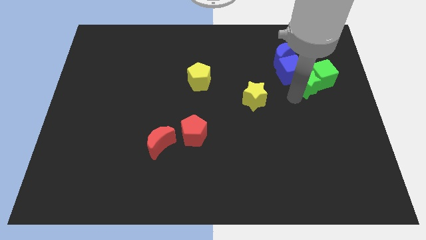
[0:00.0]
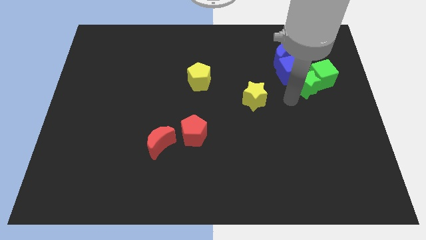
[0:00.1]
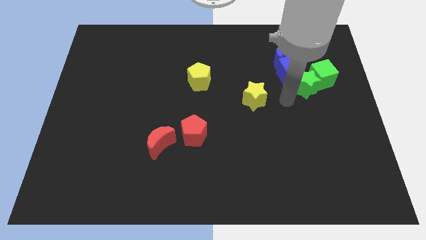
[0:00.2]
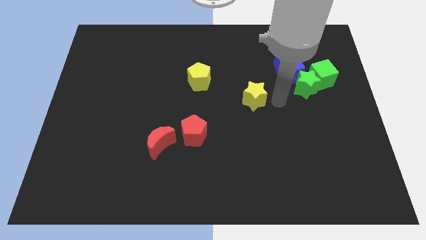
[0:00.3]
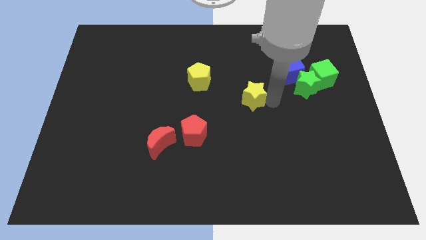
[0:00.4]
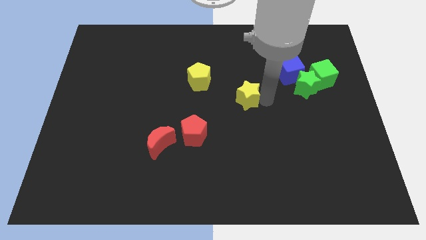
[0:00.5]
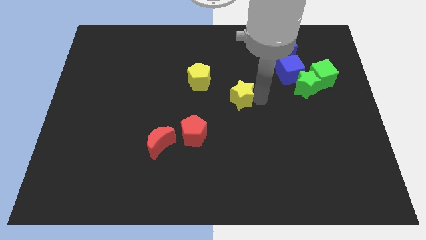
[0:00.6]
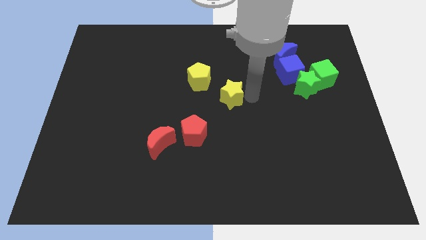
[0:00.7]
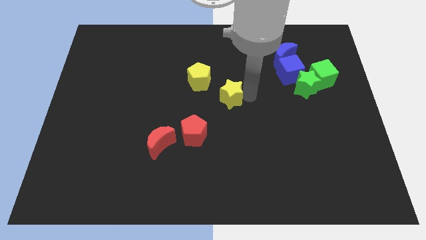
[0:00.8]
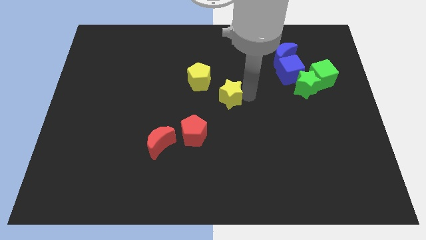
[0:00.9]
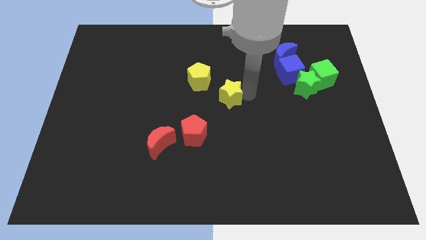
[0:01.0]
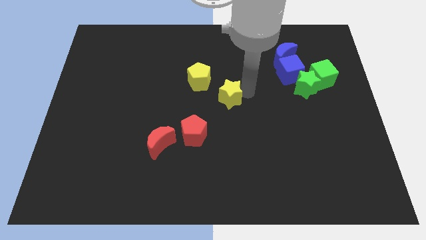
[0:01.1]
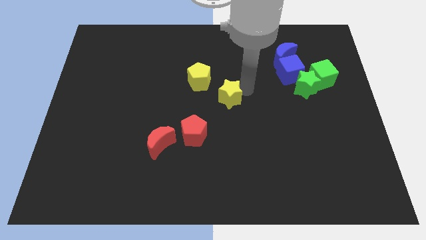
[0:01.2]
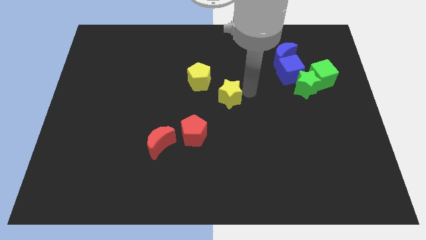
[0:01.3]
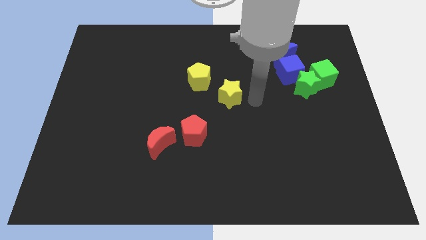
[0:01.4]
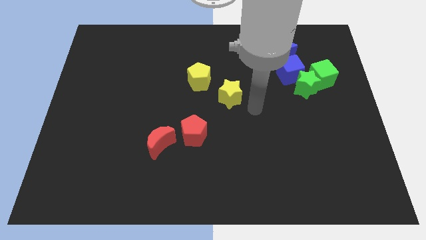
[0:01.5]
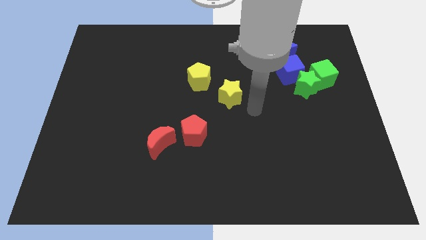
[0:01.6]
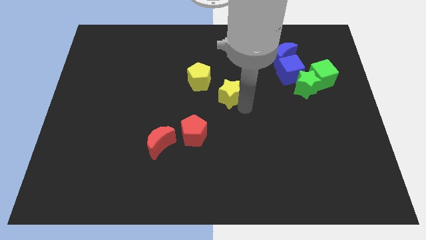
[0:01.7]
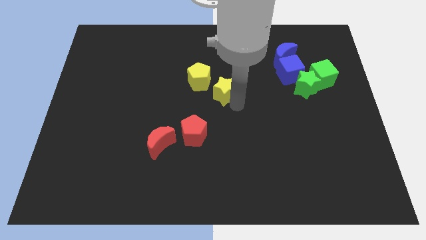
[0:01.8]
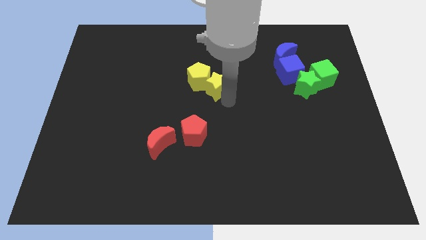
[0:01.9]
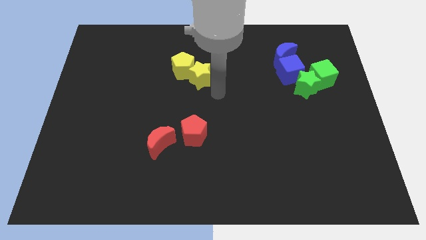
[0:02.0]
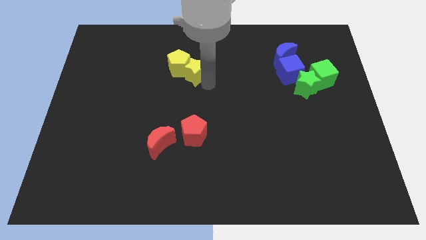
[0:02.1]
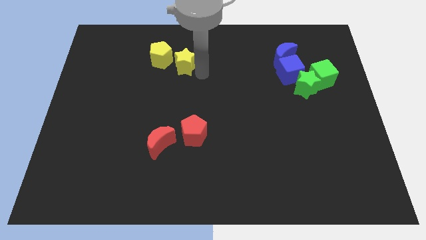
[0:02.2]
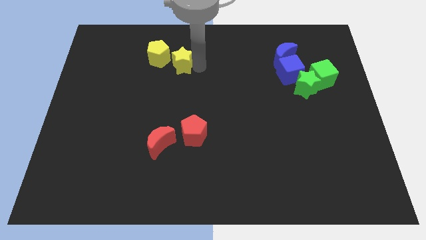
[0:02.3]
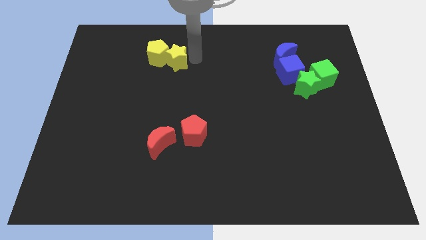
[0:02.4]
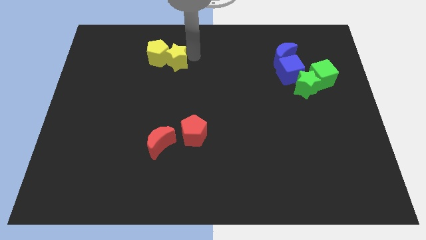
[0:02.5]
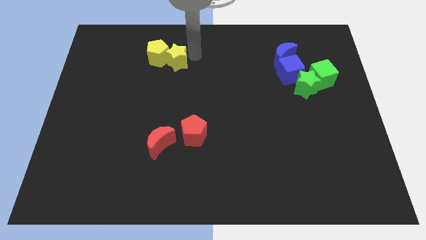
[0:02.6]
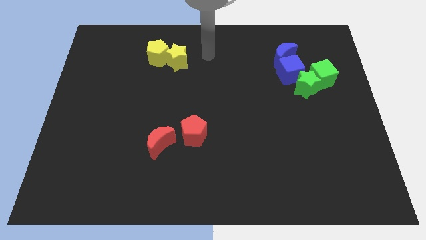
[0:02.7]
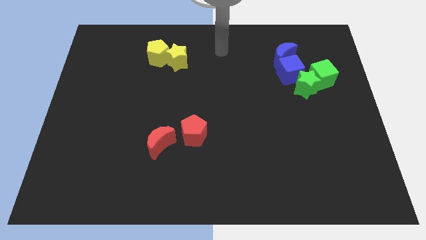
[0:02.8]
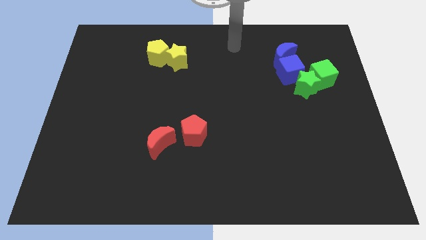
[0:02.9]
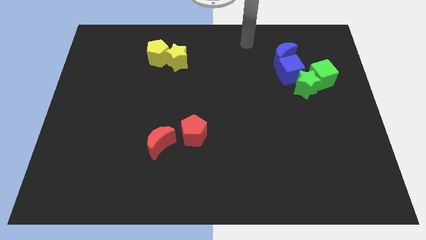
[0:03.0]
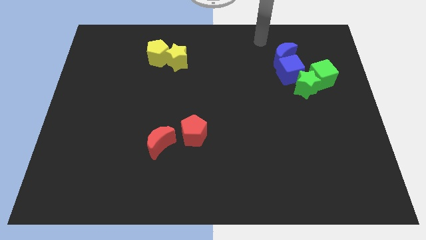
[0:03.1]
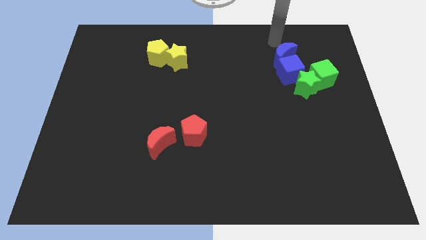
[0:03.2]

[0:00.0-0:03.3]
push the yellow star close to the yellow pentagon

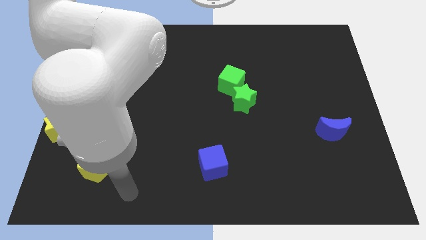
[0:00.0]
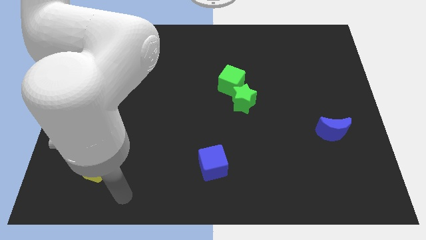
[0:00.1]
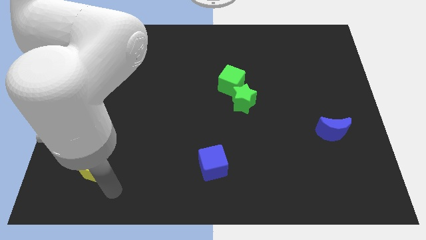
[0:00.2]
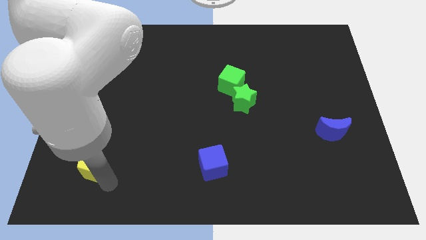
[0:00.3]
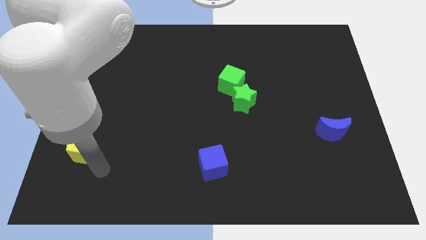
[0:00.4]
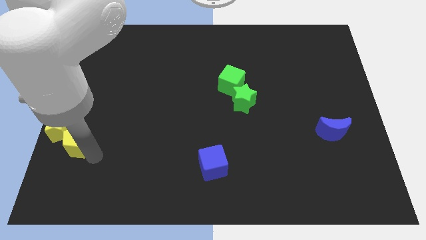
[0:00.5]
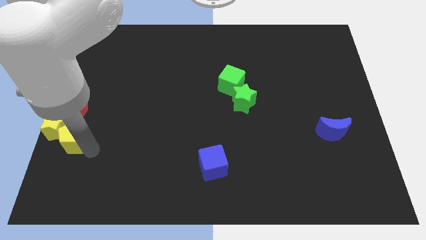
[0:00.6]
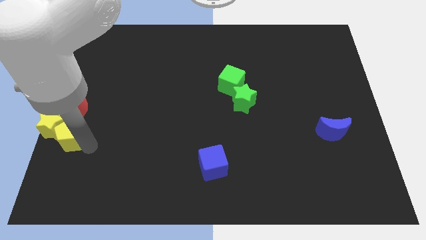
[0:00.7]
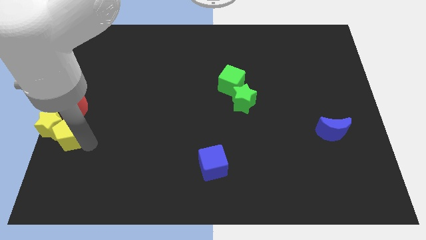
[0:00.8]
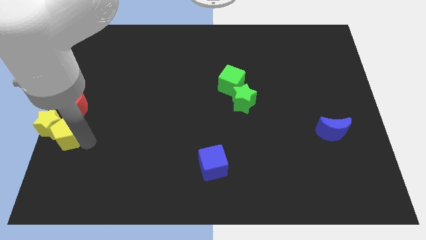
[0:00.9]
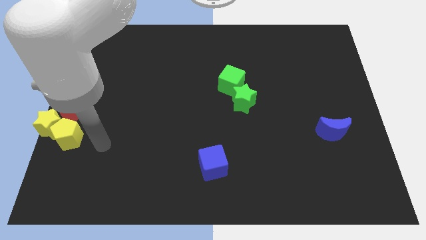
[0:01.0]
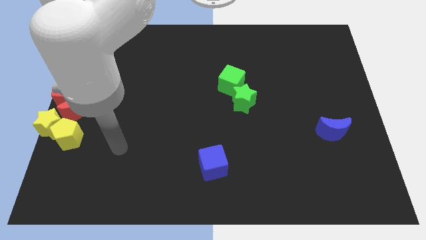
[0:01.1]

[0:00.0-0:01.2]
push the yellow pentagon into the yellow star

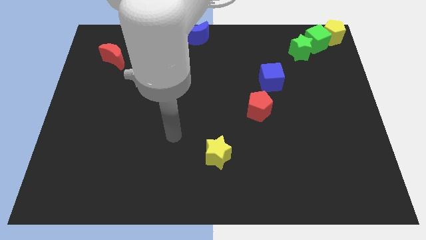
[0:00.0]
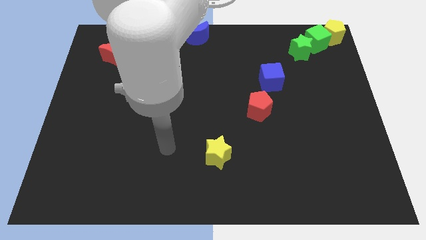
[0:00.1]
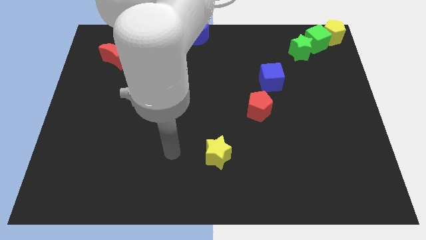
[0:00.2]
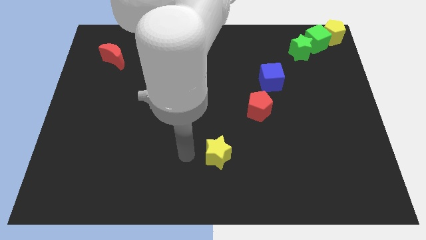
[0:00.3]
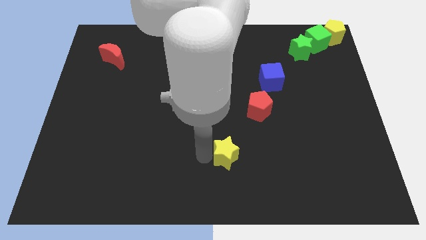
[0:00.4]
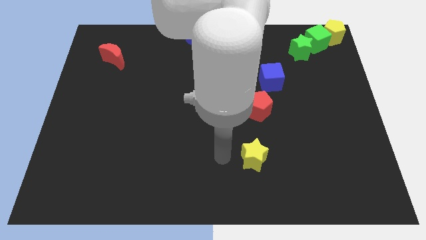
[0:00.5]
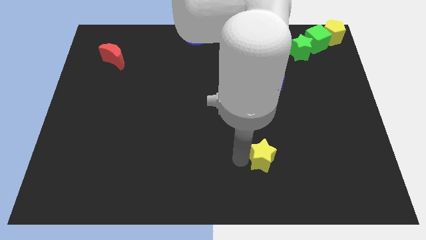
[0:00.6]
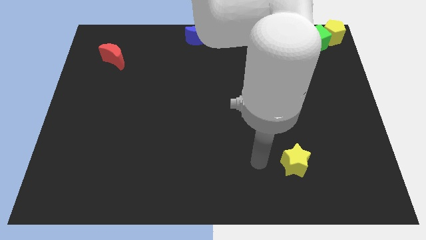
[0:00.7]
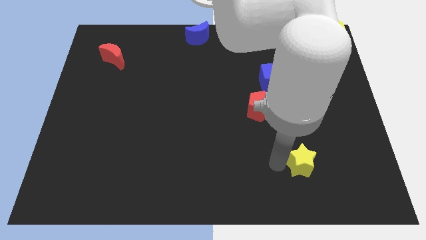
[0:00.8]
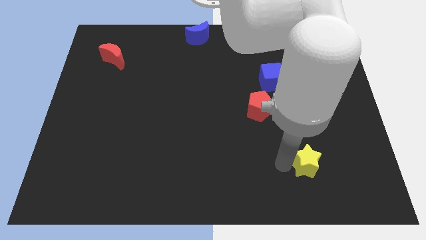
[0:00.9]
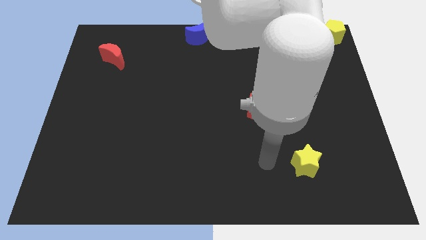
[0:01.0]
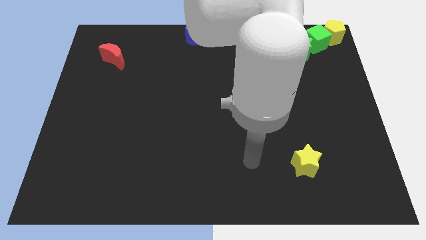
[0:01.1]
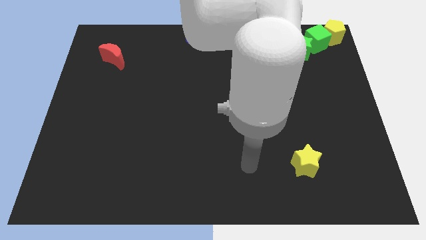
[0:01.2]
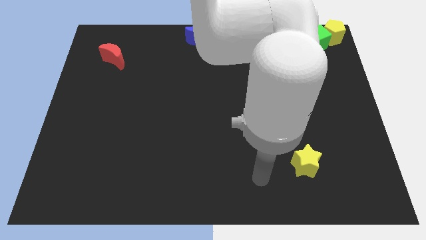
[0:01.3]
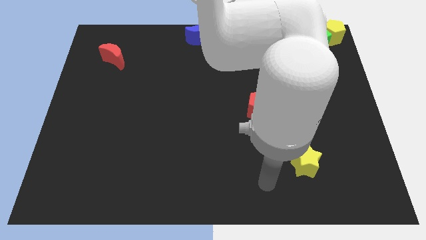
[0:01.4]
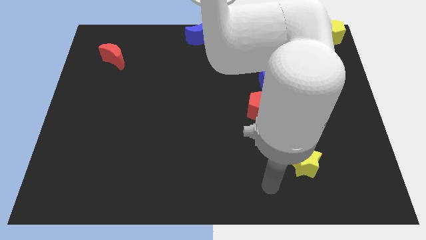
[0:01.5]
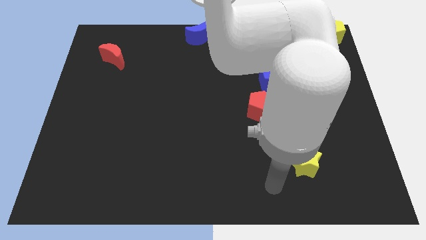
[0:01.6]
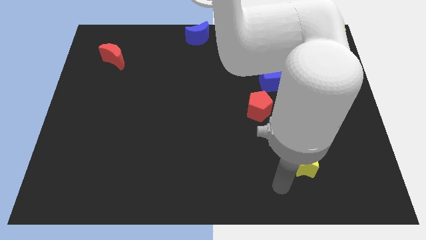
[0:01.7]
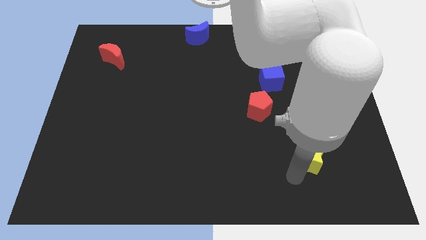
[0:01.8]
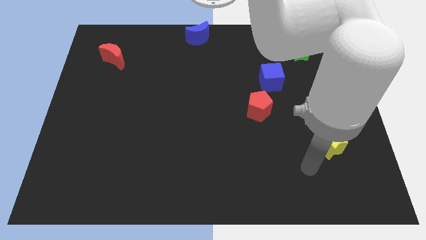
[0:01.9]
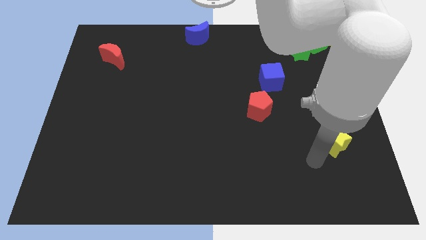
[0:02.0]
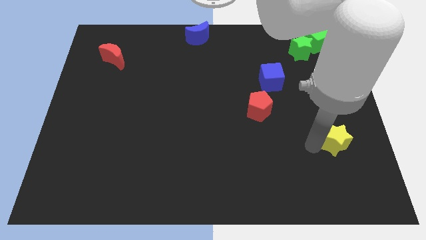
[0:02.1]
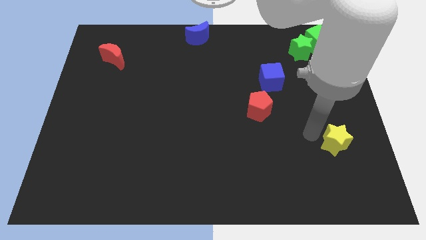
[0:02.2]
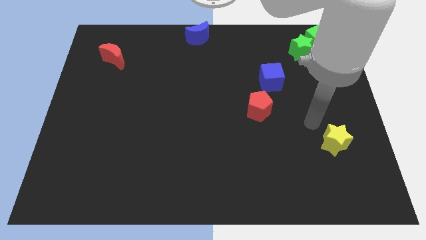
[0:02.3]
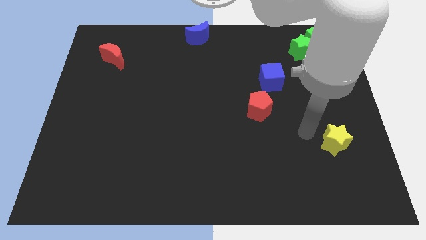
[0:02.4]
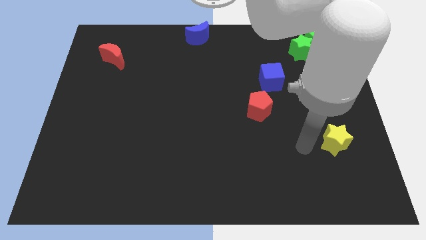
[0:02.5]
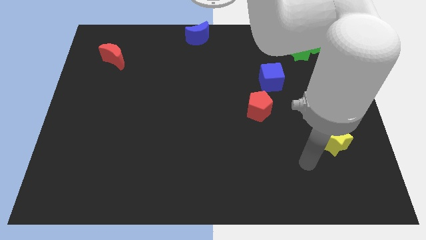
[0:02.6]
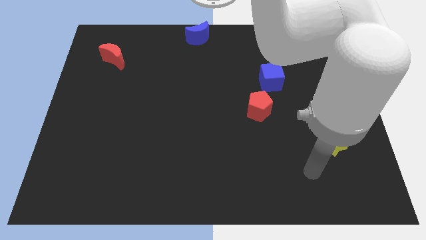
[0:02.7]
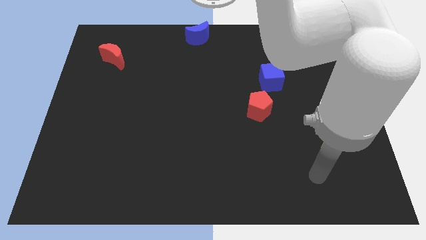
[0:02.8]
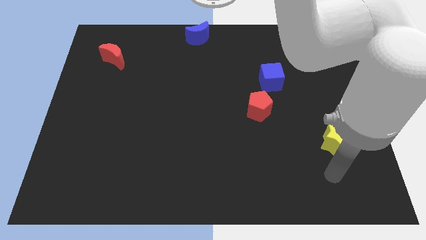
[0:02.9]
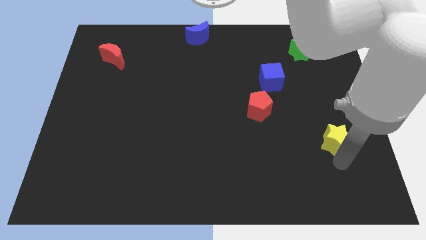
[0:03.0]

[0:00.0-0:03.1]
push the yellow star to the right side of the board

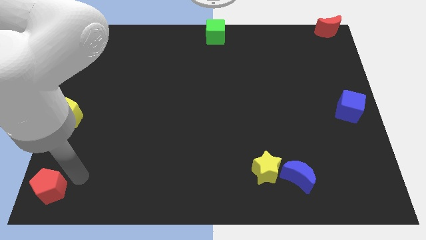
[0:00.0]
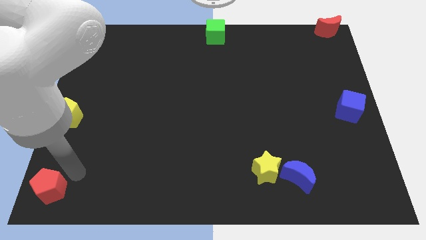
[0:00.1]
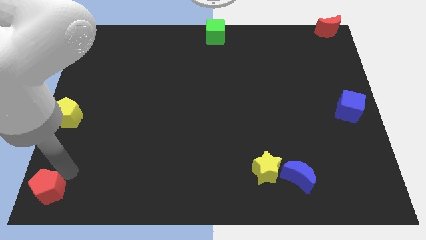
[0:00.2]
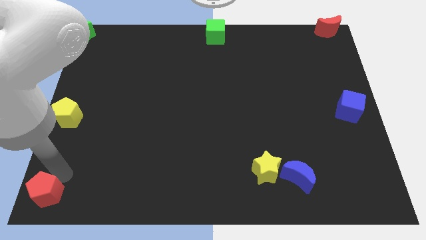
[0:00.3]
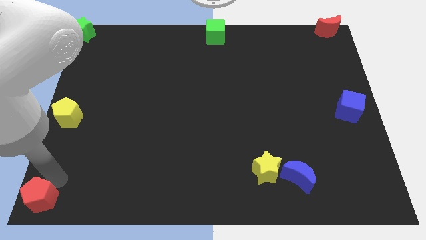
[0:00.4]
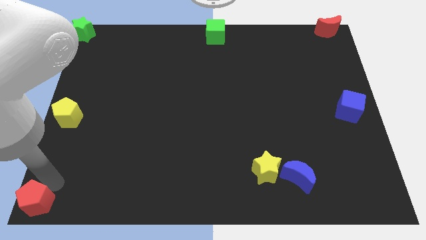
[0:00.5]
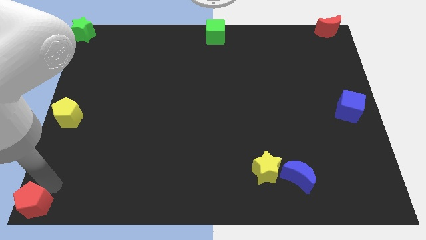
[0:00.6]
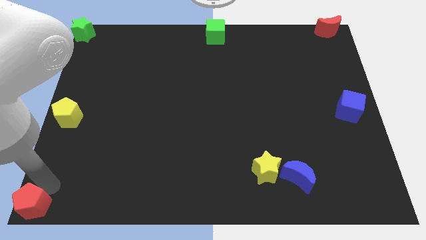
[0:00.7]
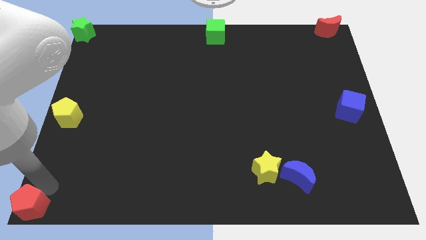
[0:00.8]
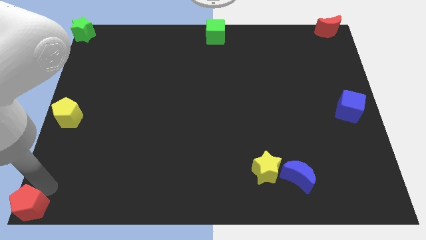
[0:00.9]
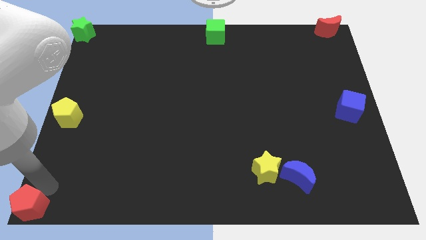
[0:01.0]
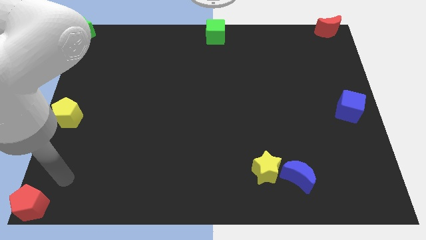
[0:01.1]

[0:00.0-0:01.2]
push red pentagon to the bottom left corner of the board

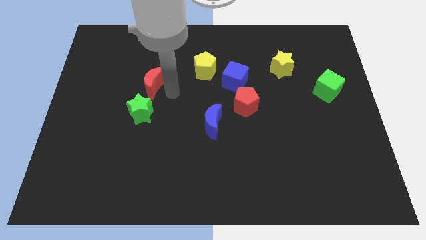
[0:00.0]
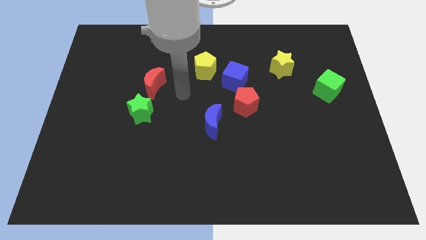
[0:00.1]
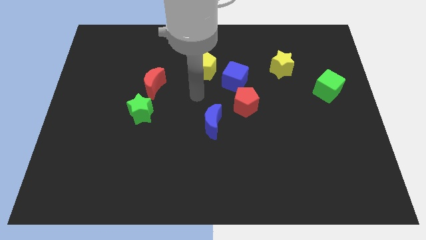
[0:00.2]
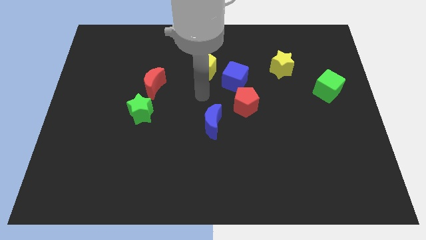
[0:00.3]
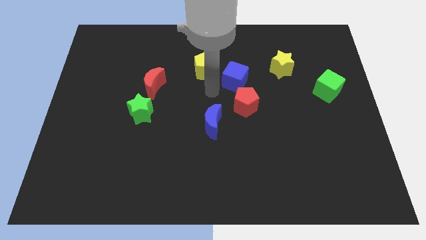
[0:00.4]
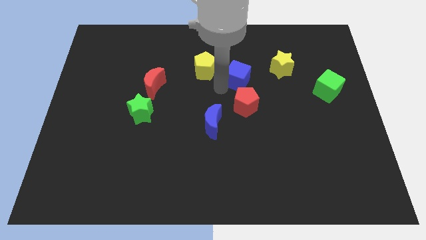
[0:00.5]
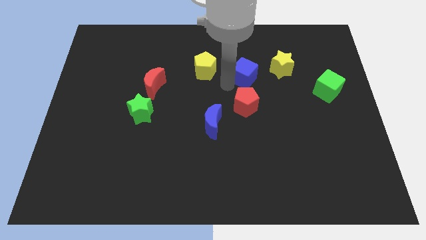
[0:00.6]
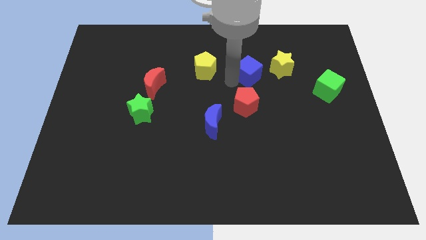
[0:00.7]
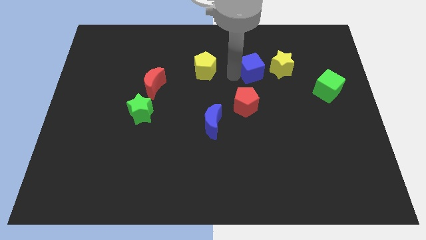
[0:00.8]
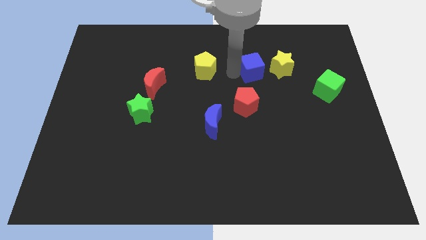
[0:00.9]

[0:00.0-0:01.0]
push the blue cube to the top of the red pentagon
